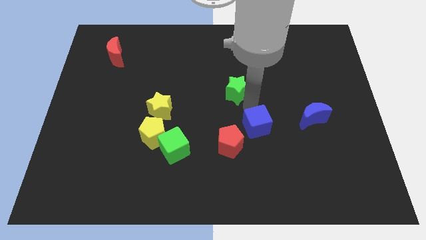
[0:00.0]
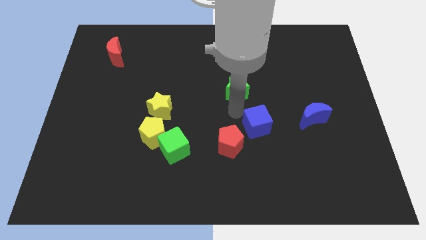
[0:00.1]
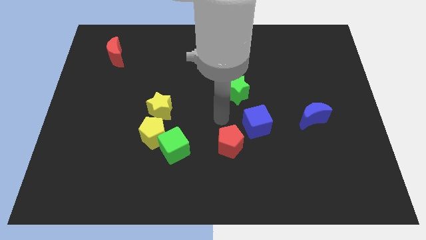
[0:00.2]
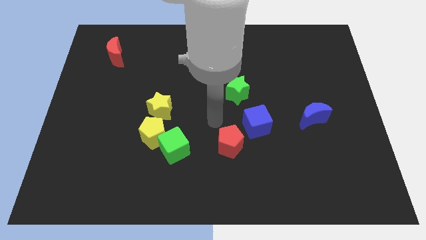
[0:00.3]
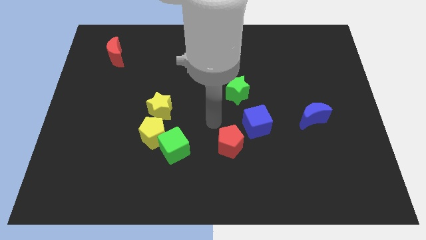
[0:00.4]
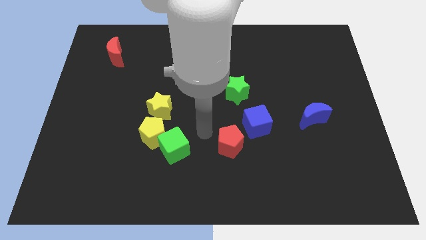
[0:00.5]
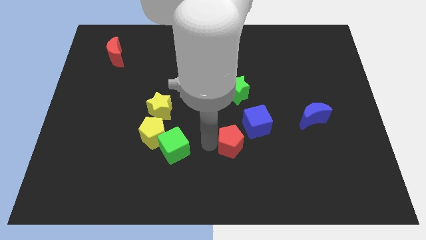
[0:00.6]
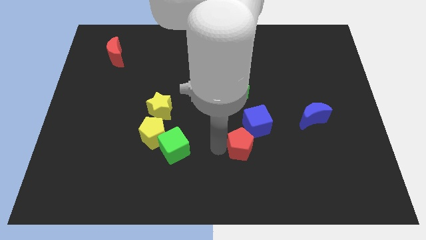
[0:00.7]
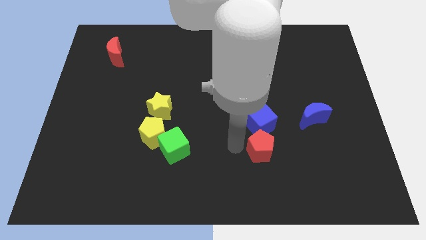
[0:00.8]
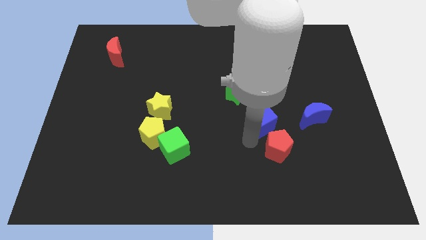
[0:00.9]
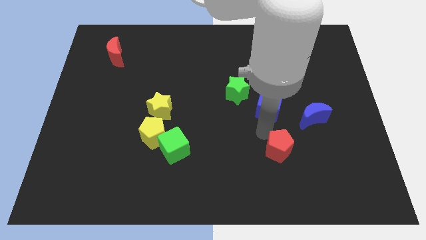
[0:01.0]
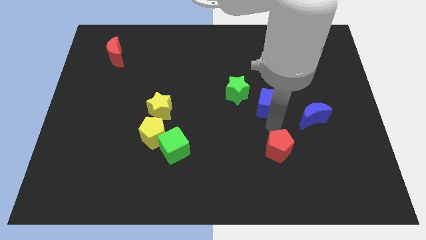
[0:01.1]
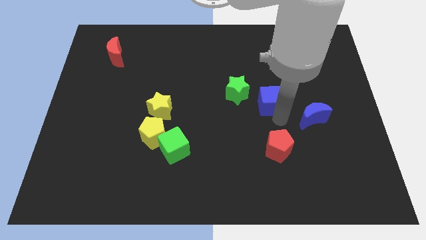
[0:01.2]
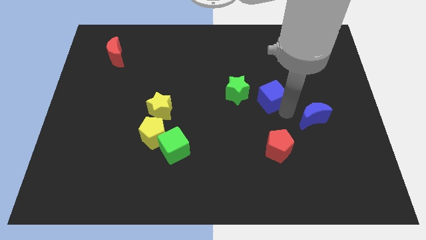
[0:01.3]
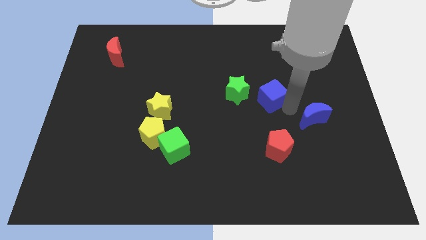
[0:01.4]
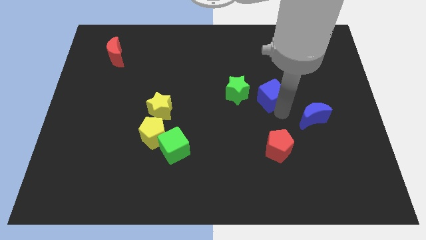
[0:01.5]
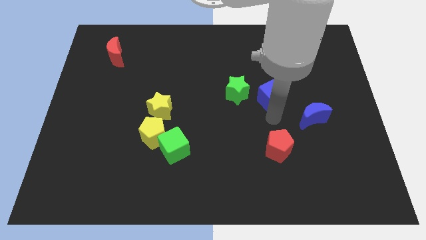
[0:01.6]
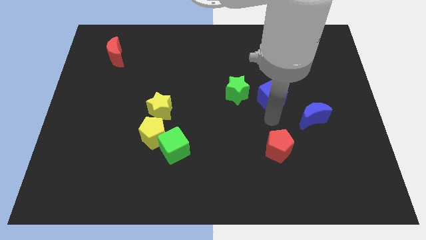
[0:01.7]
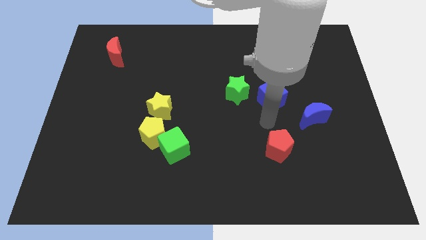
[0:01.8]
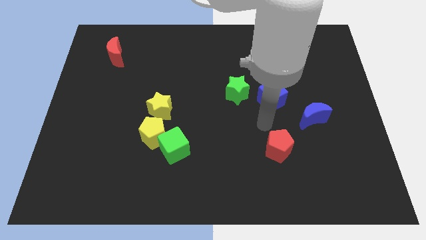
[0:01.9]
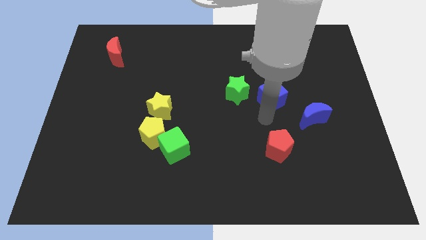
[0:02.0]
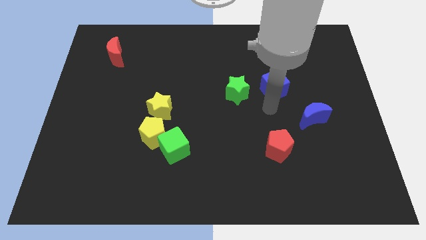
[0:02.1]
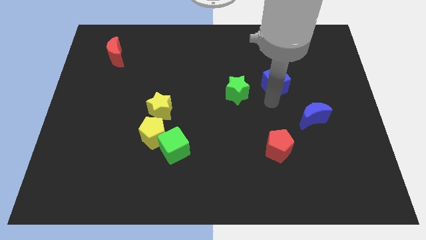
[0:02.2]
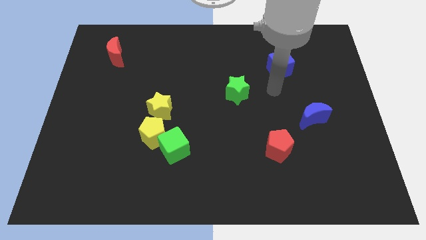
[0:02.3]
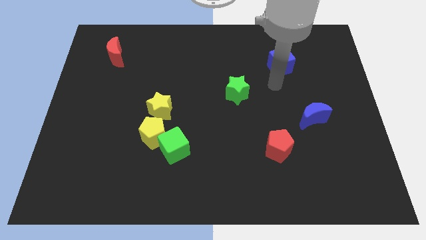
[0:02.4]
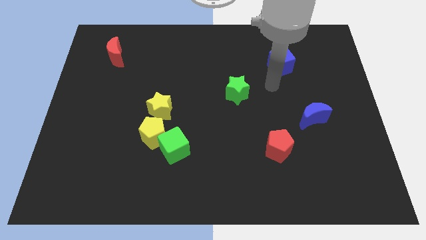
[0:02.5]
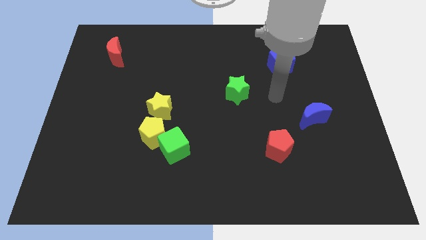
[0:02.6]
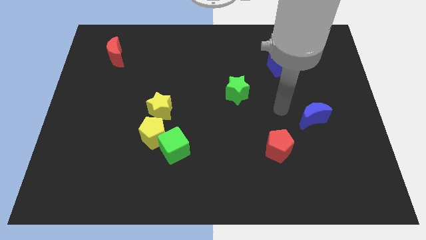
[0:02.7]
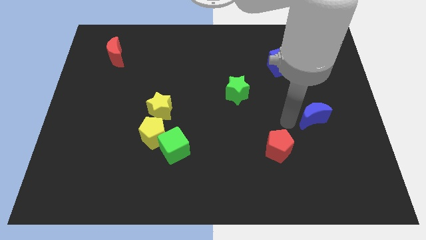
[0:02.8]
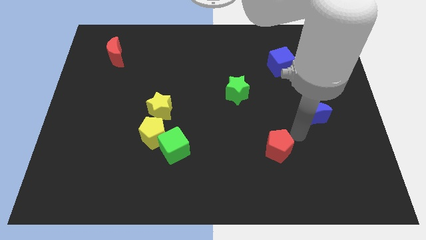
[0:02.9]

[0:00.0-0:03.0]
push the red pentagon slightly right

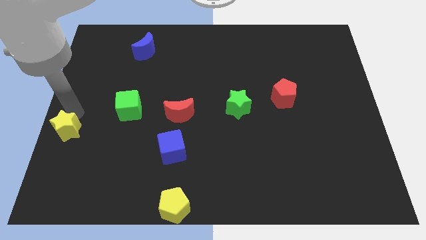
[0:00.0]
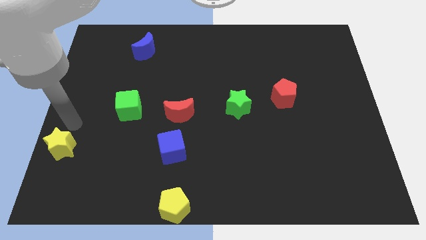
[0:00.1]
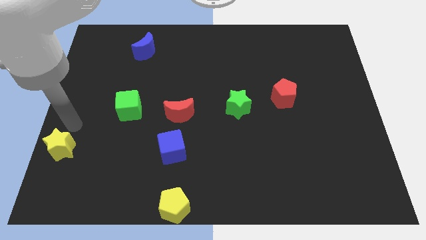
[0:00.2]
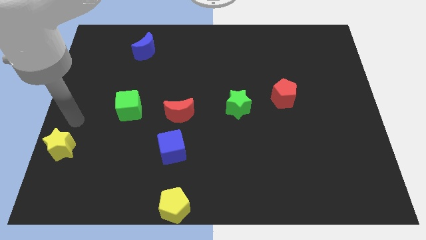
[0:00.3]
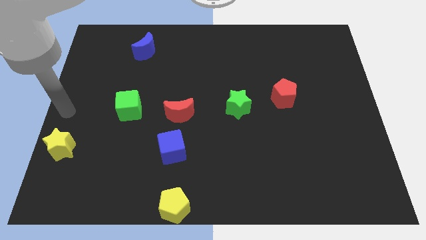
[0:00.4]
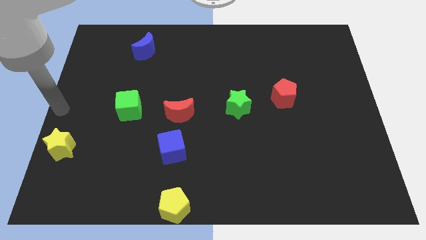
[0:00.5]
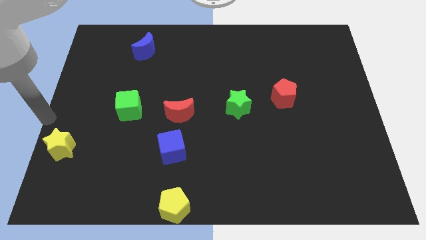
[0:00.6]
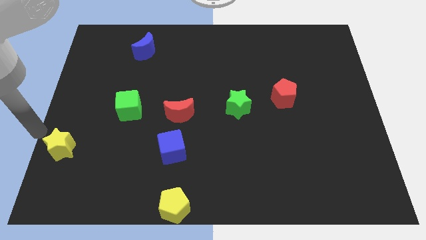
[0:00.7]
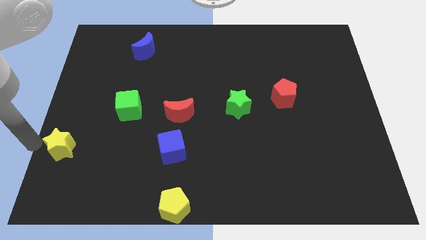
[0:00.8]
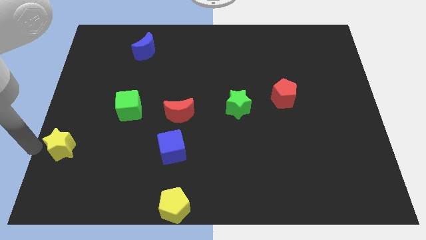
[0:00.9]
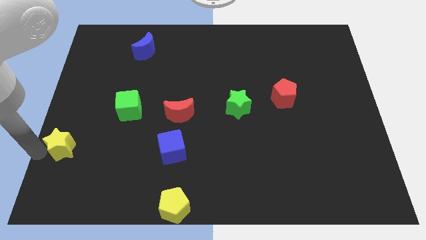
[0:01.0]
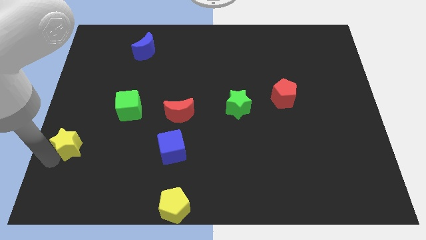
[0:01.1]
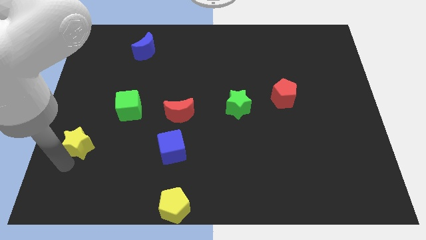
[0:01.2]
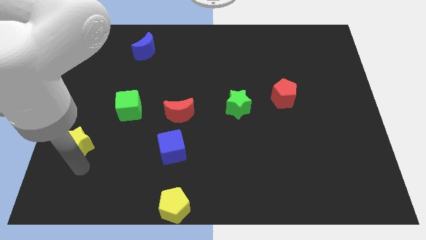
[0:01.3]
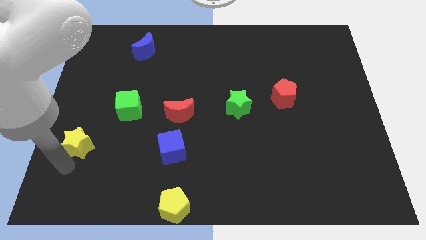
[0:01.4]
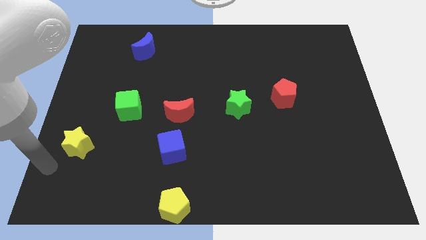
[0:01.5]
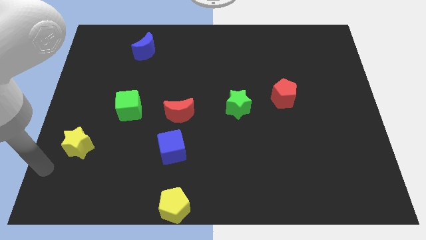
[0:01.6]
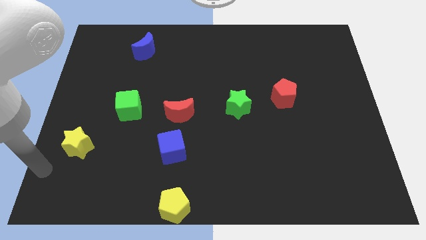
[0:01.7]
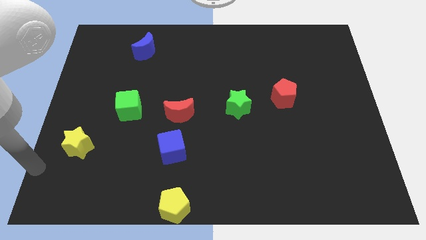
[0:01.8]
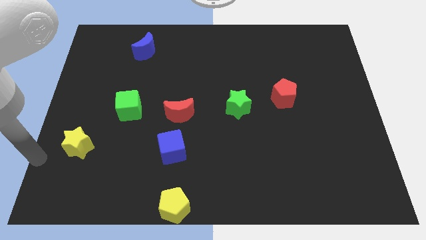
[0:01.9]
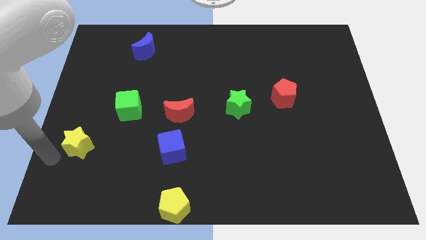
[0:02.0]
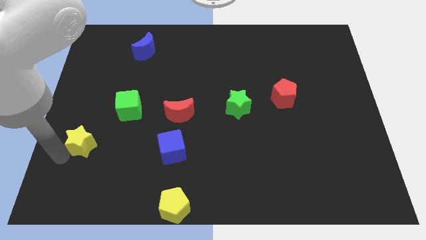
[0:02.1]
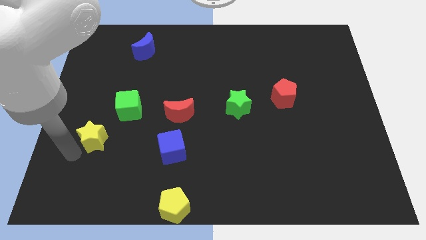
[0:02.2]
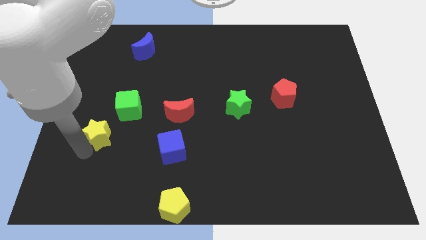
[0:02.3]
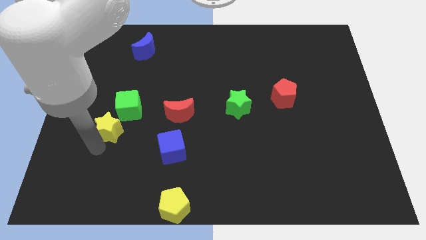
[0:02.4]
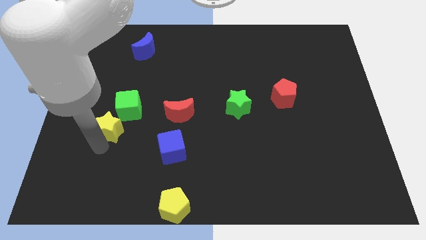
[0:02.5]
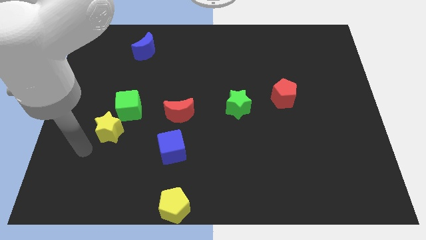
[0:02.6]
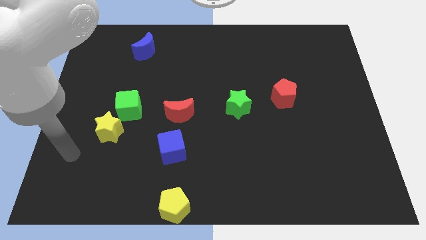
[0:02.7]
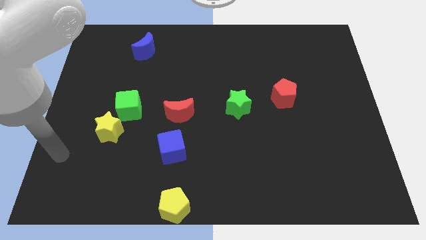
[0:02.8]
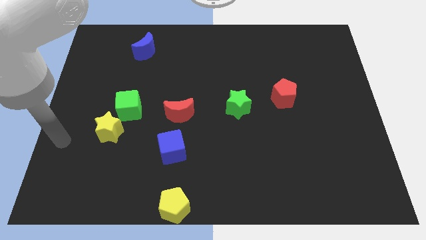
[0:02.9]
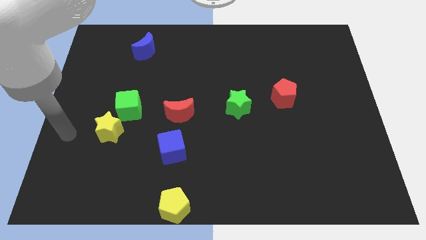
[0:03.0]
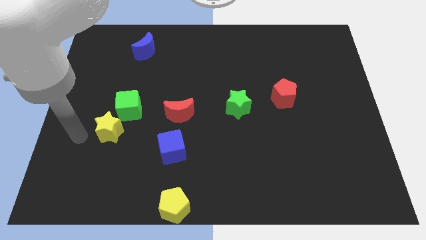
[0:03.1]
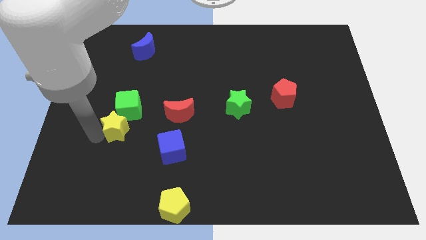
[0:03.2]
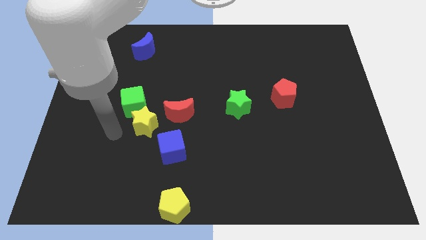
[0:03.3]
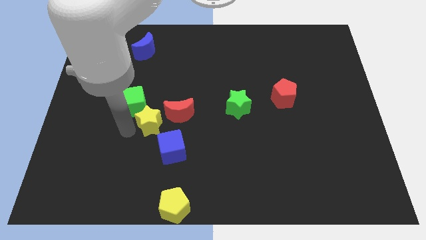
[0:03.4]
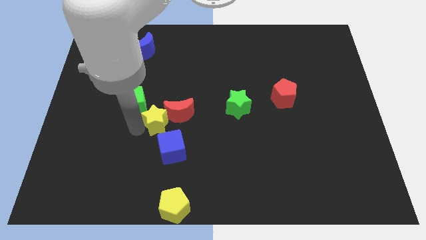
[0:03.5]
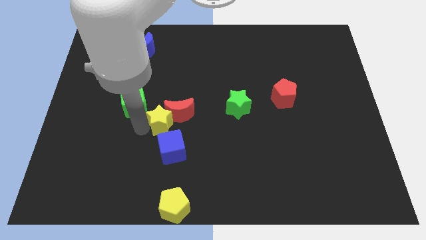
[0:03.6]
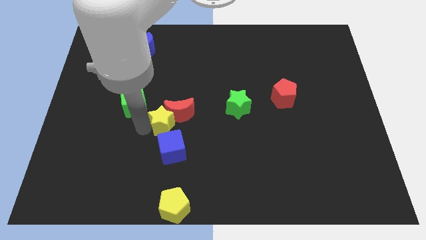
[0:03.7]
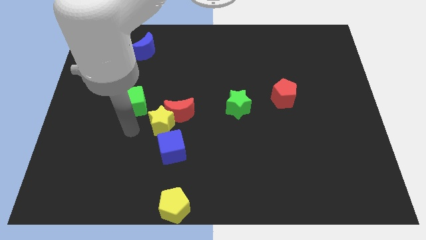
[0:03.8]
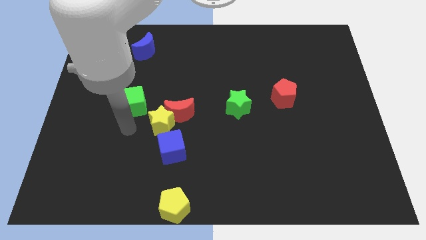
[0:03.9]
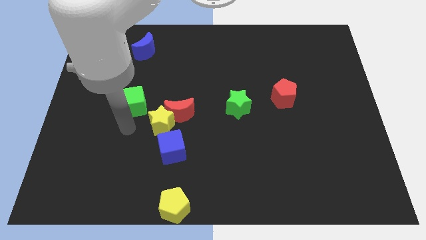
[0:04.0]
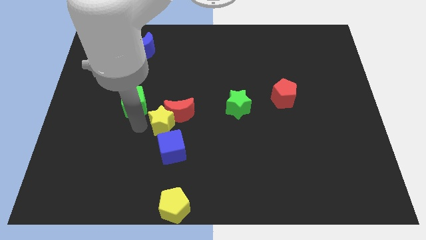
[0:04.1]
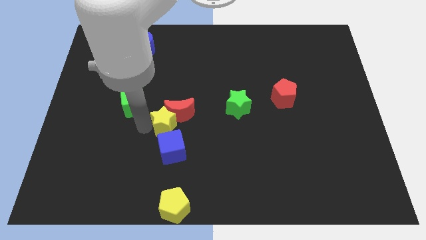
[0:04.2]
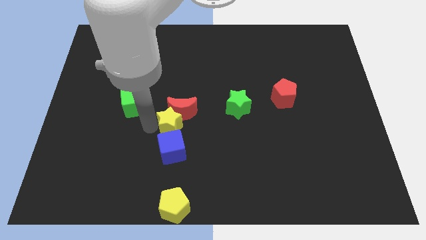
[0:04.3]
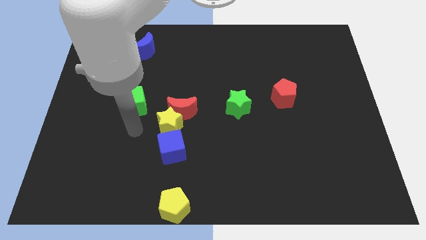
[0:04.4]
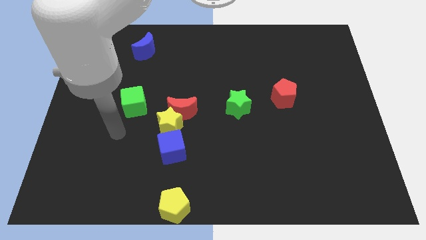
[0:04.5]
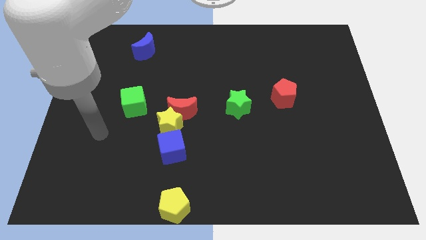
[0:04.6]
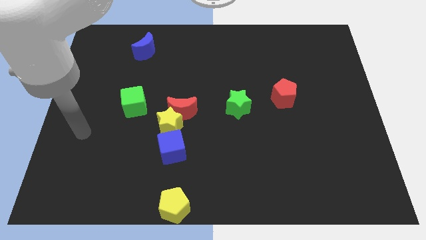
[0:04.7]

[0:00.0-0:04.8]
move the yellow star above the blue cube

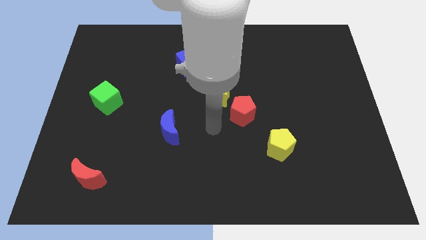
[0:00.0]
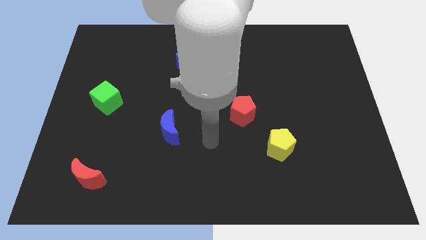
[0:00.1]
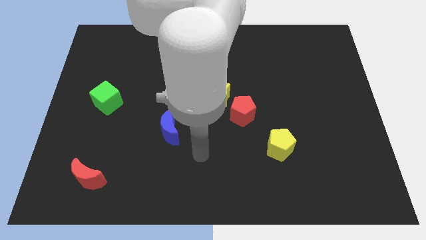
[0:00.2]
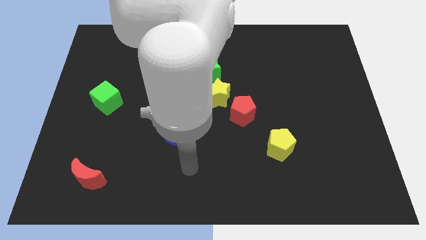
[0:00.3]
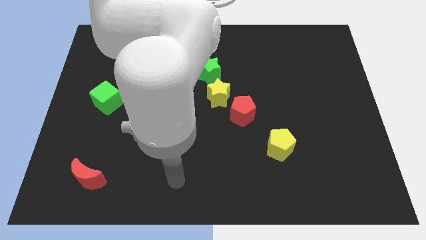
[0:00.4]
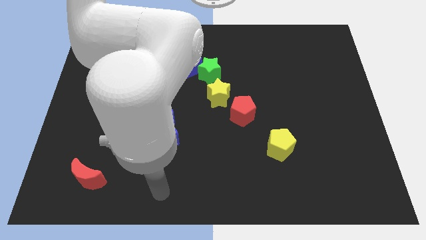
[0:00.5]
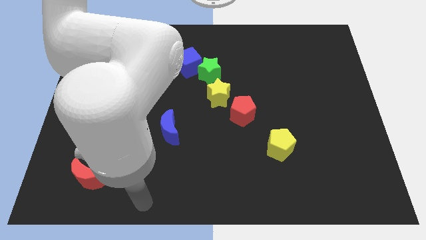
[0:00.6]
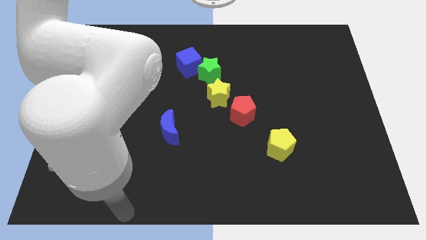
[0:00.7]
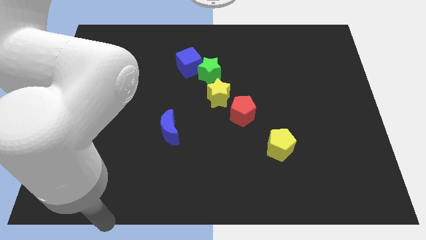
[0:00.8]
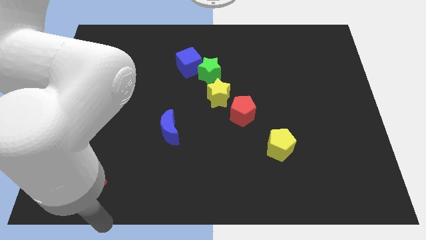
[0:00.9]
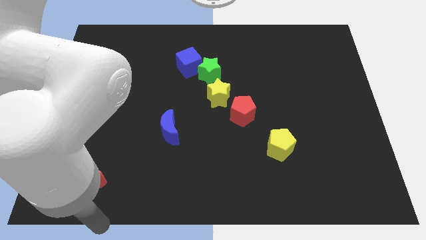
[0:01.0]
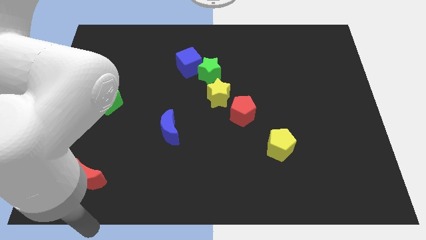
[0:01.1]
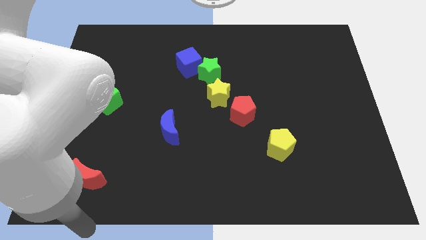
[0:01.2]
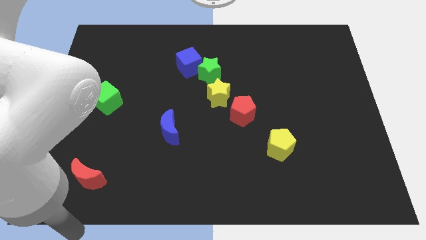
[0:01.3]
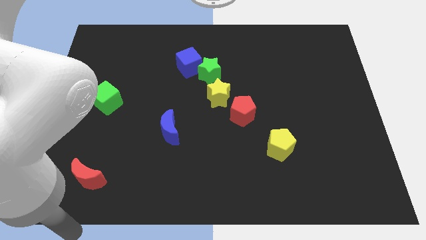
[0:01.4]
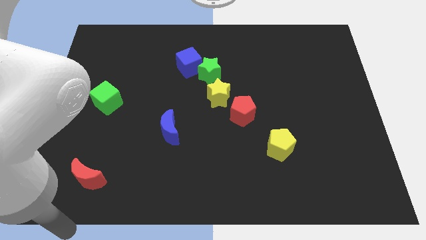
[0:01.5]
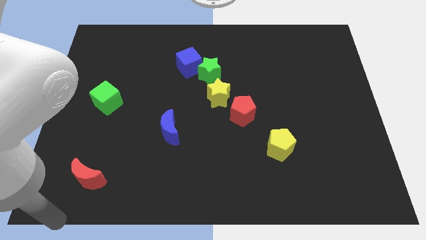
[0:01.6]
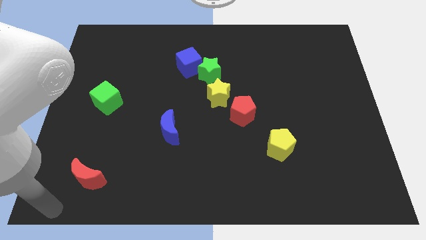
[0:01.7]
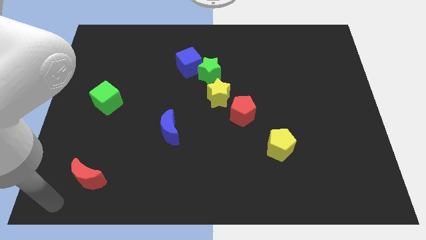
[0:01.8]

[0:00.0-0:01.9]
place the arm at the bottom right corner of the board
